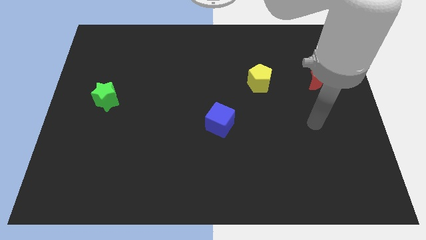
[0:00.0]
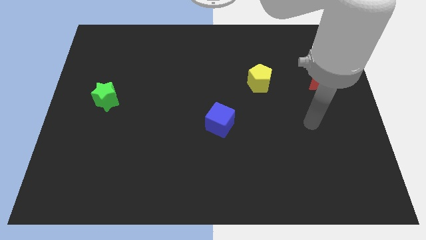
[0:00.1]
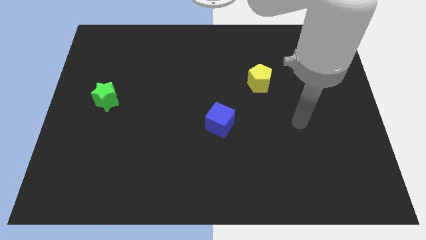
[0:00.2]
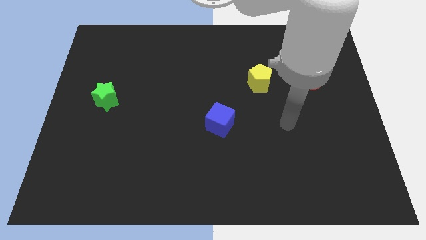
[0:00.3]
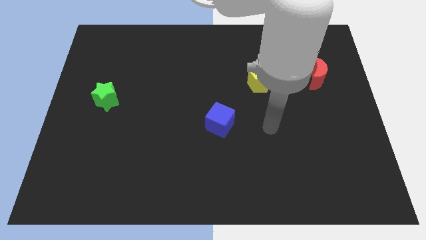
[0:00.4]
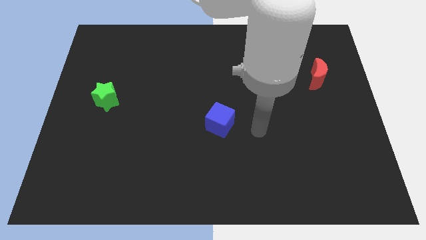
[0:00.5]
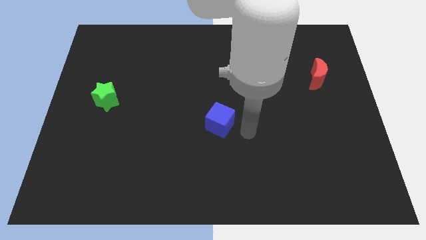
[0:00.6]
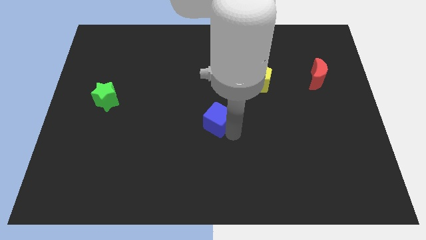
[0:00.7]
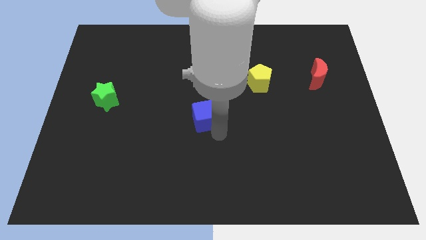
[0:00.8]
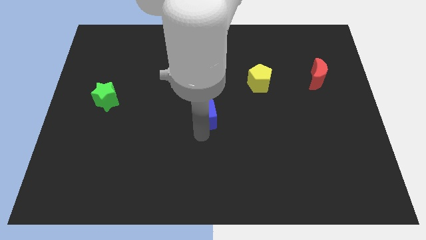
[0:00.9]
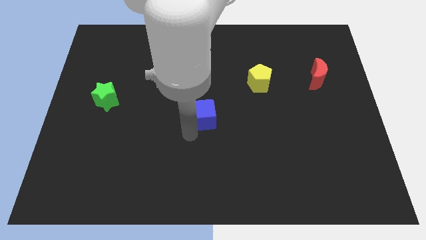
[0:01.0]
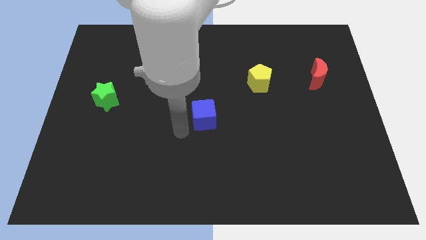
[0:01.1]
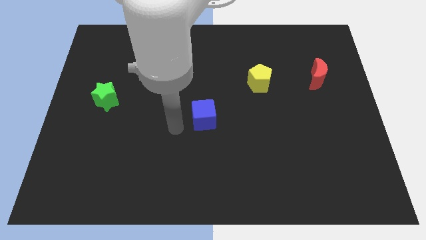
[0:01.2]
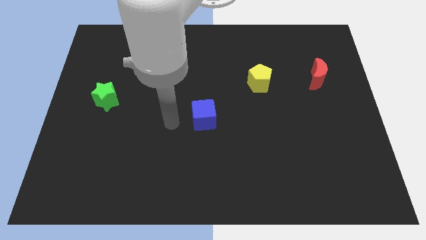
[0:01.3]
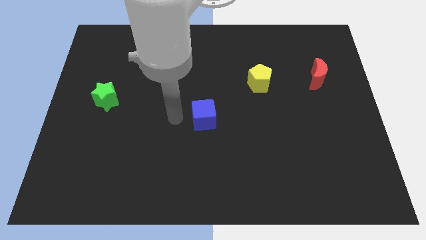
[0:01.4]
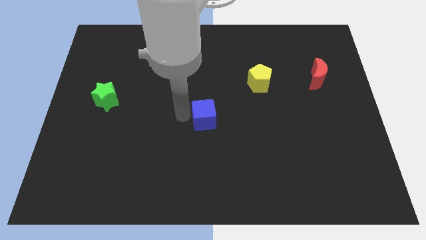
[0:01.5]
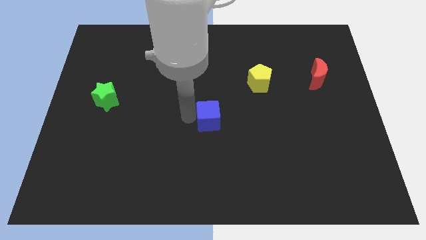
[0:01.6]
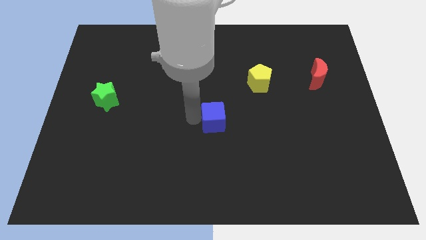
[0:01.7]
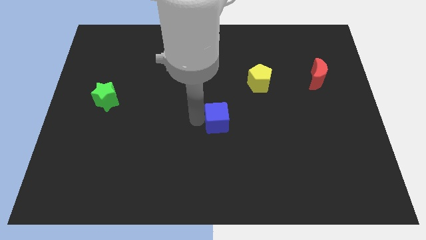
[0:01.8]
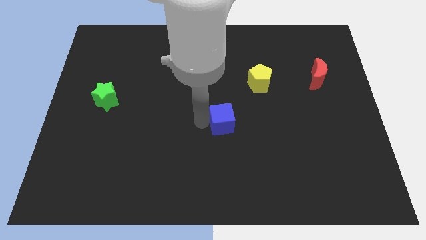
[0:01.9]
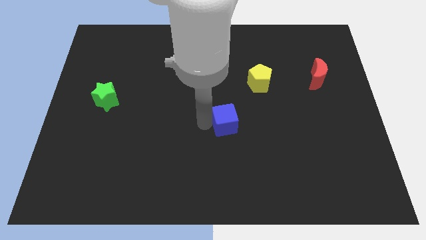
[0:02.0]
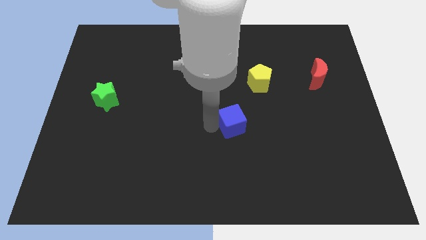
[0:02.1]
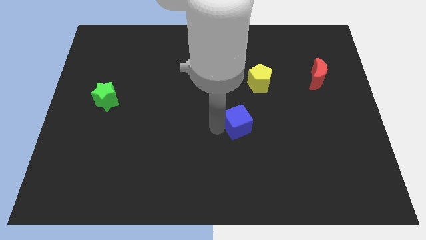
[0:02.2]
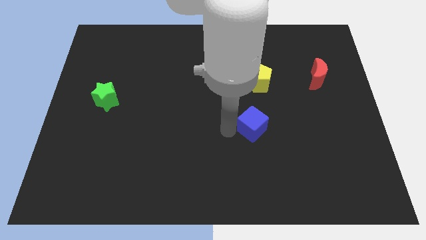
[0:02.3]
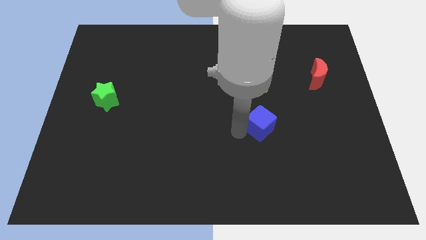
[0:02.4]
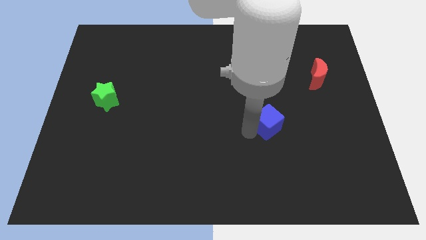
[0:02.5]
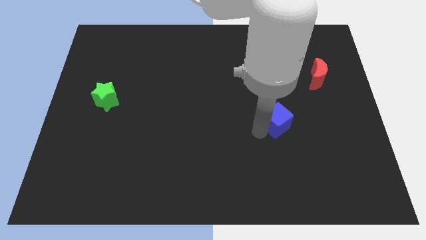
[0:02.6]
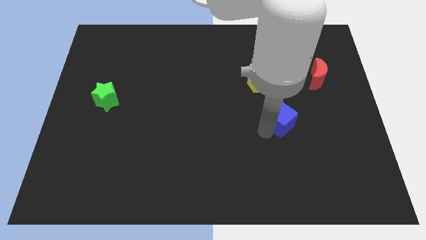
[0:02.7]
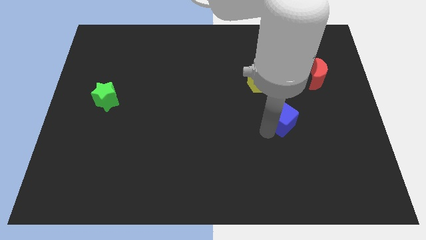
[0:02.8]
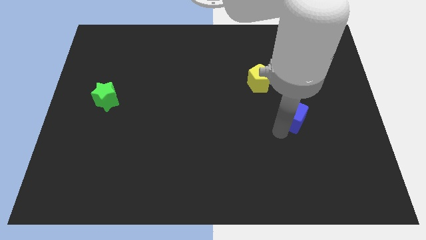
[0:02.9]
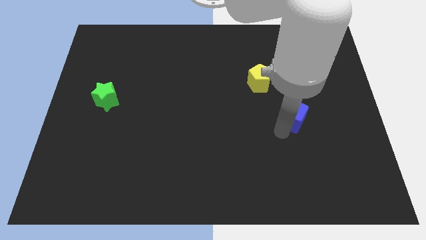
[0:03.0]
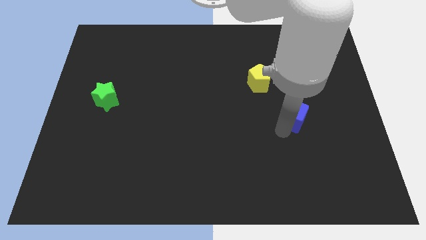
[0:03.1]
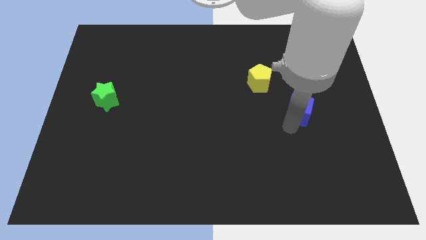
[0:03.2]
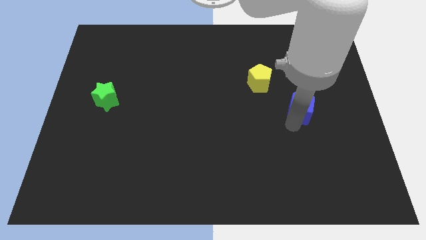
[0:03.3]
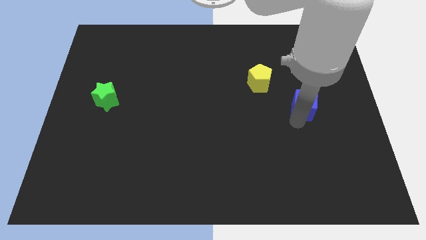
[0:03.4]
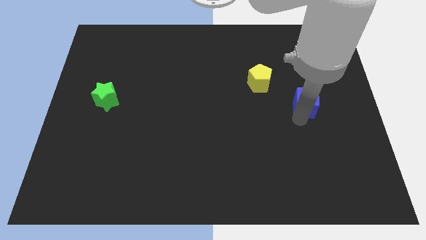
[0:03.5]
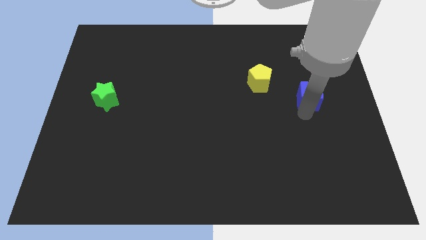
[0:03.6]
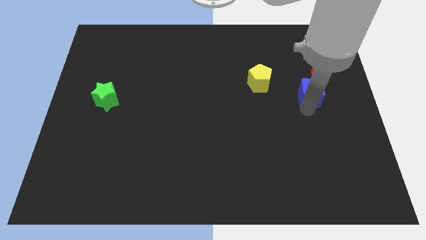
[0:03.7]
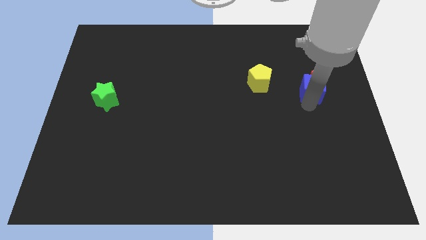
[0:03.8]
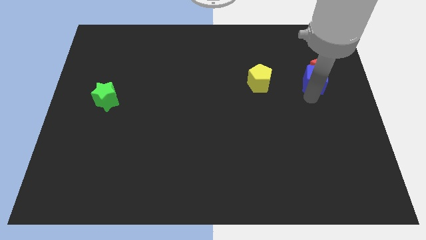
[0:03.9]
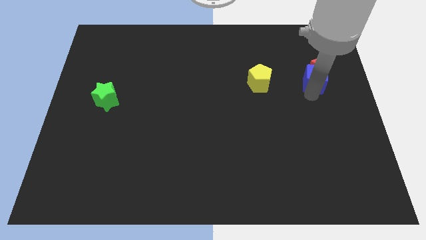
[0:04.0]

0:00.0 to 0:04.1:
move the cube next to the moon

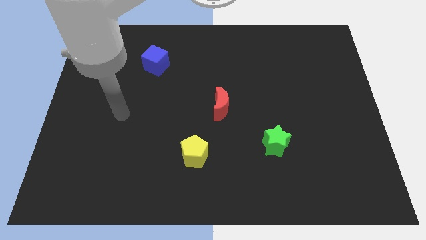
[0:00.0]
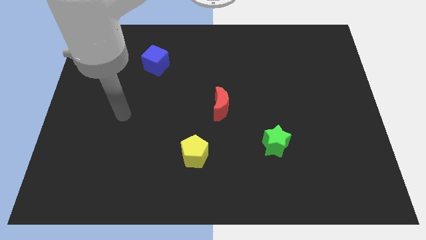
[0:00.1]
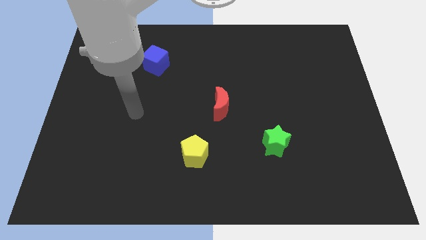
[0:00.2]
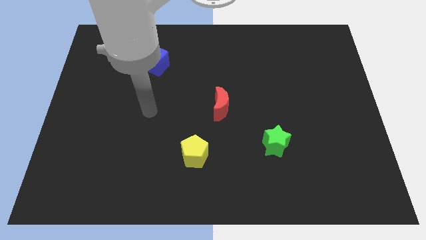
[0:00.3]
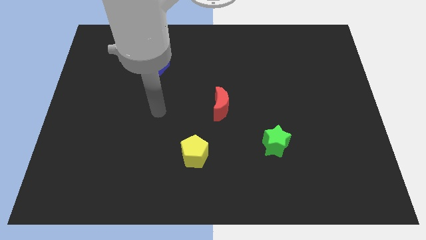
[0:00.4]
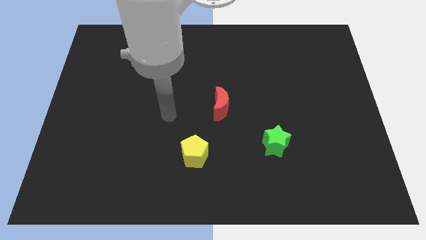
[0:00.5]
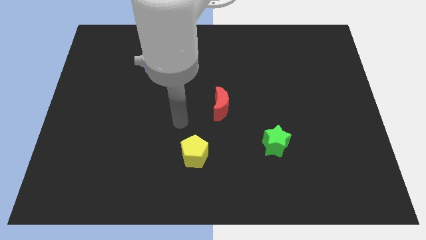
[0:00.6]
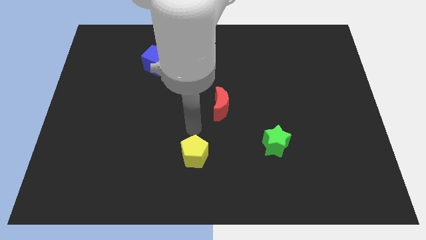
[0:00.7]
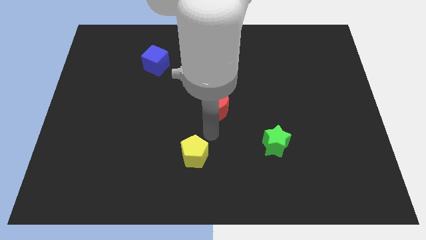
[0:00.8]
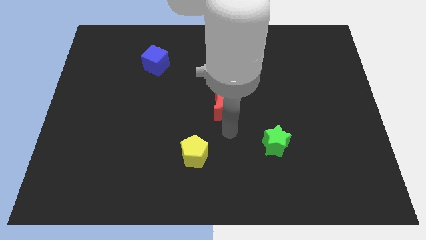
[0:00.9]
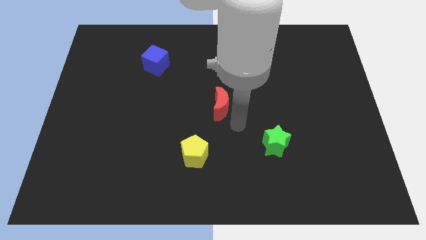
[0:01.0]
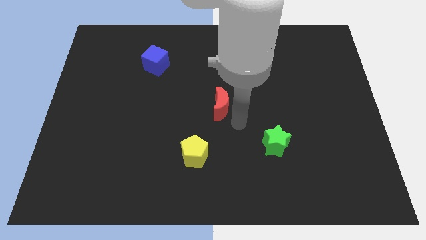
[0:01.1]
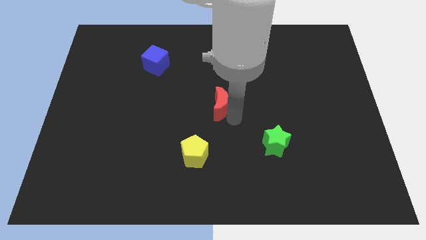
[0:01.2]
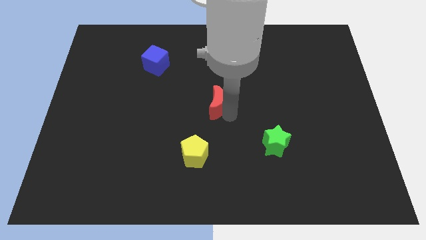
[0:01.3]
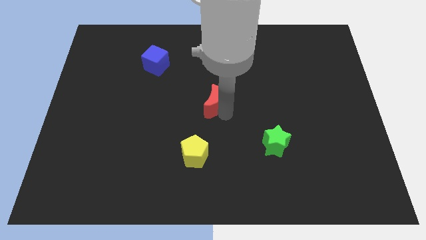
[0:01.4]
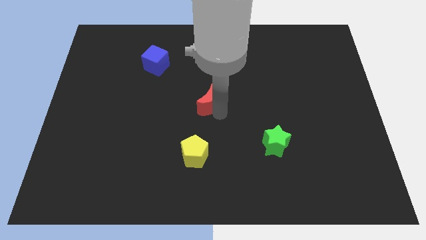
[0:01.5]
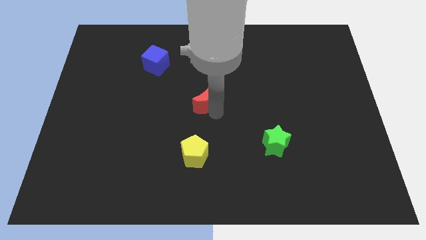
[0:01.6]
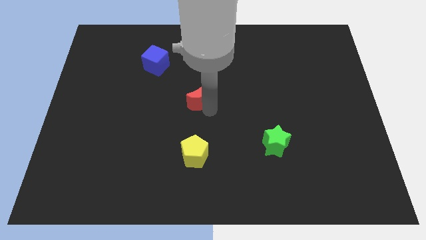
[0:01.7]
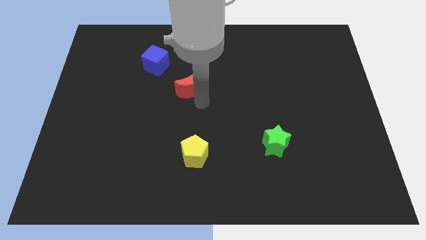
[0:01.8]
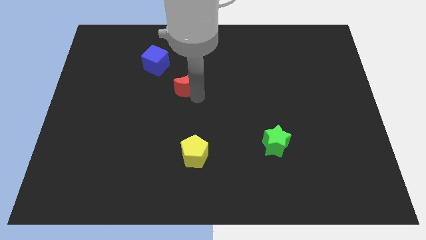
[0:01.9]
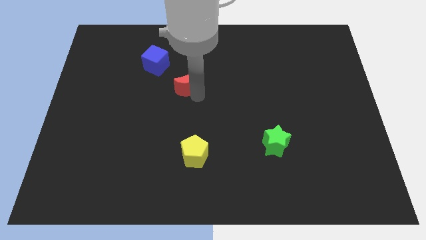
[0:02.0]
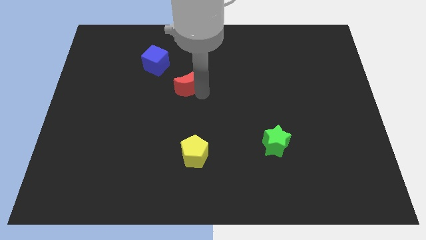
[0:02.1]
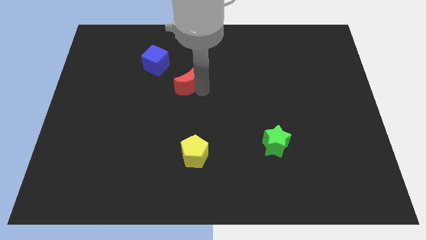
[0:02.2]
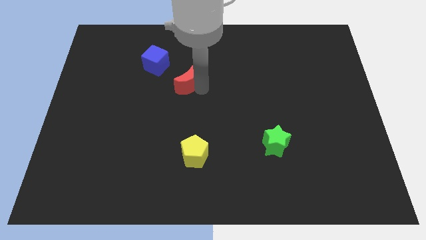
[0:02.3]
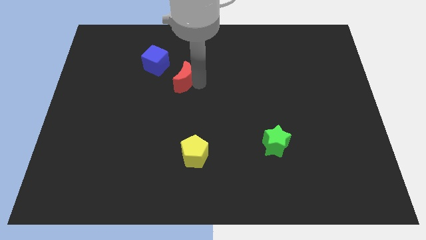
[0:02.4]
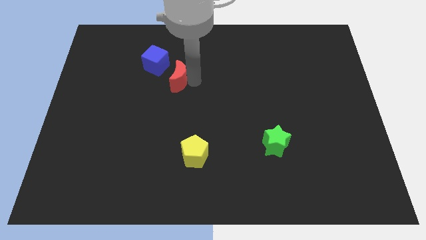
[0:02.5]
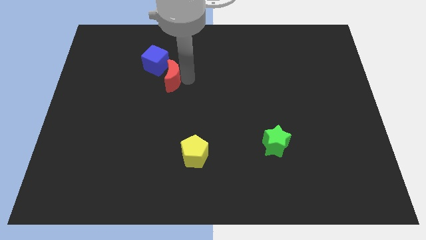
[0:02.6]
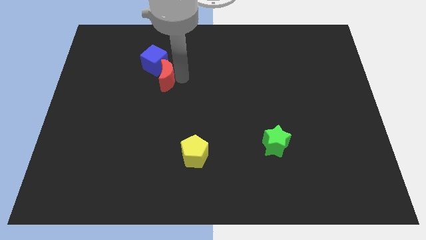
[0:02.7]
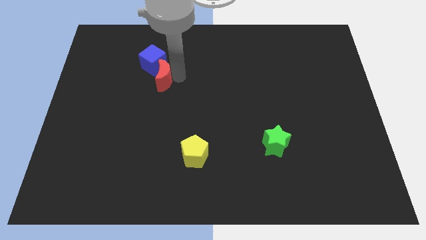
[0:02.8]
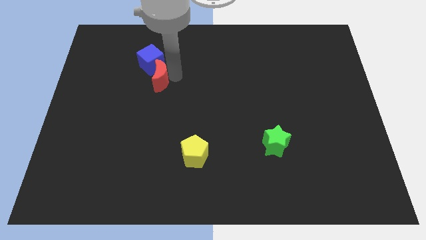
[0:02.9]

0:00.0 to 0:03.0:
push the red block close to the blue cube

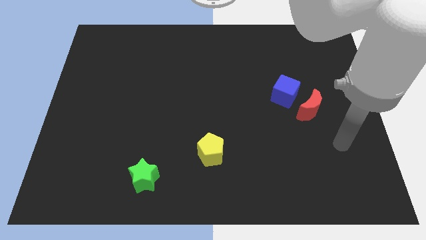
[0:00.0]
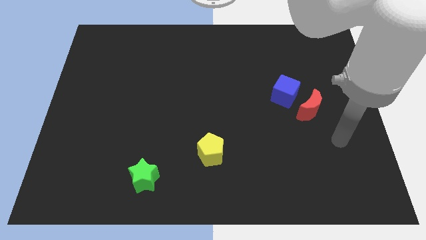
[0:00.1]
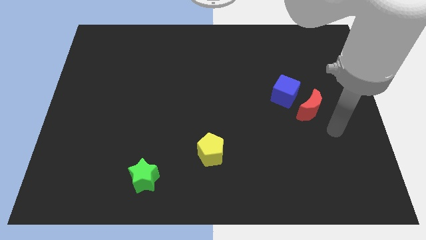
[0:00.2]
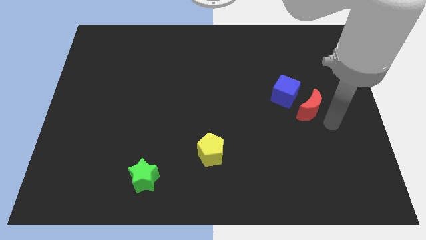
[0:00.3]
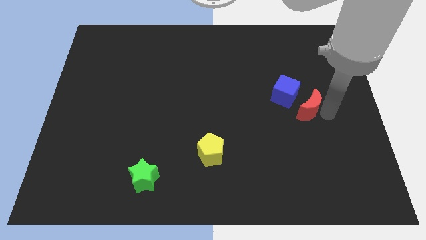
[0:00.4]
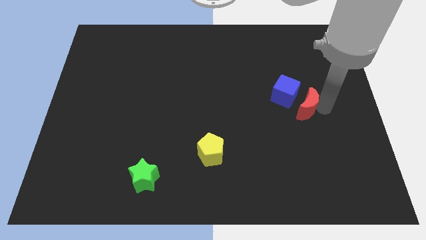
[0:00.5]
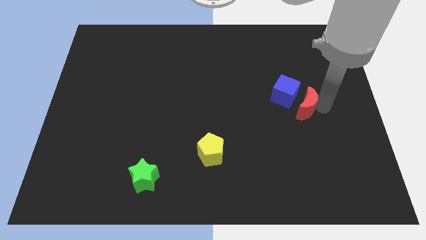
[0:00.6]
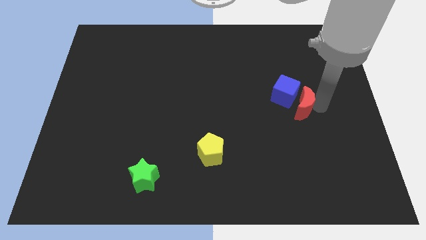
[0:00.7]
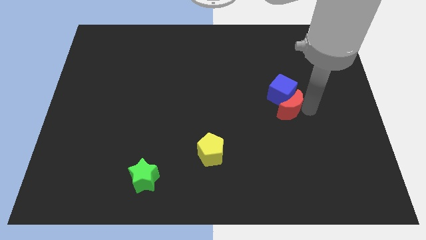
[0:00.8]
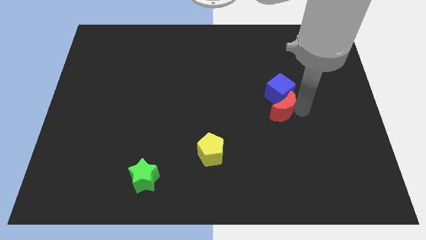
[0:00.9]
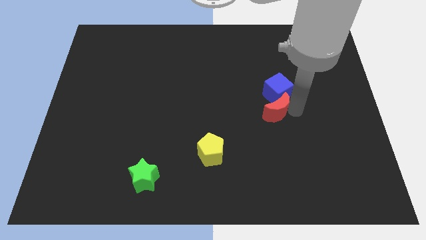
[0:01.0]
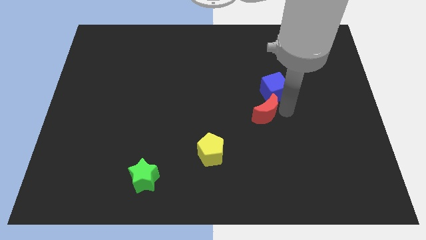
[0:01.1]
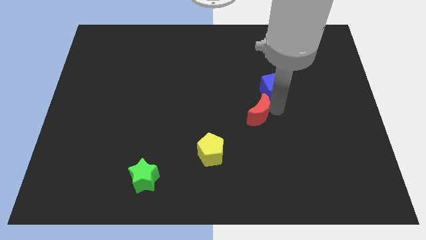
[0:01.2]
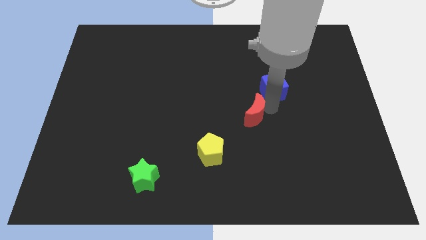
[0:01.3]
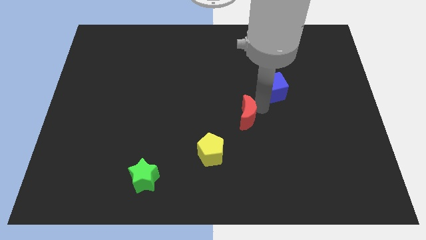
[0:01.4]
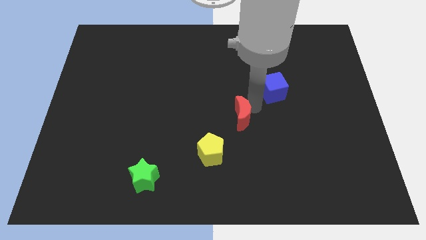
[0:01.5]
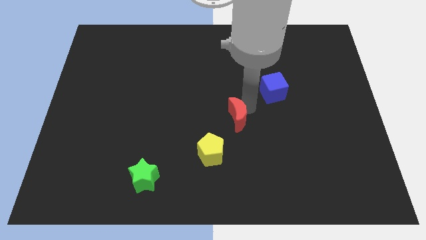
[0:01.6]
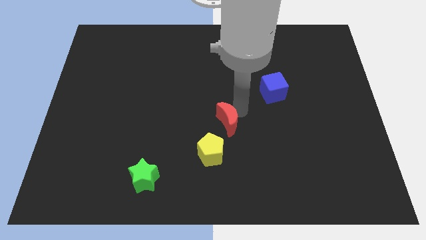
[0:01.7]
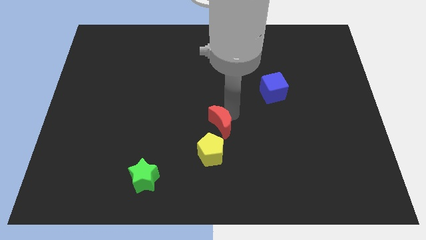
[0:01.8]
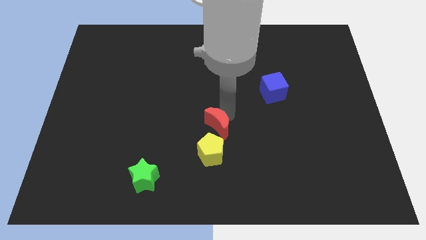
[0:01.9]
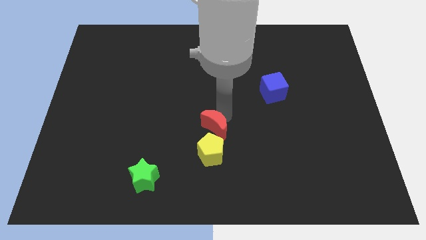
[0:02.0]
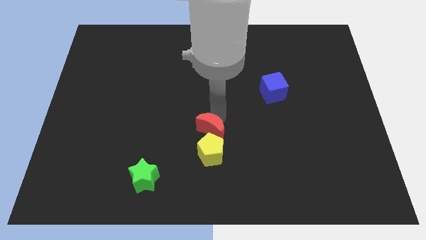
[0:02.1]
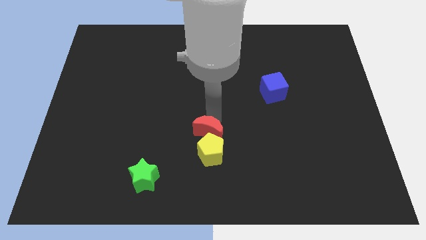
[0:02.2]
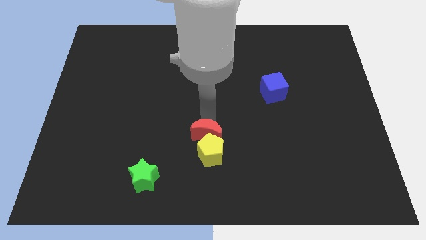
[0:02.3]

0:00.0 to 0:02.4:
push the red block to the yellow pentagon
